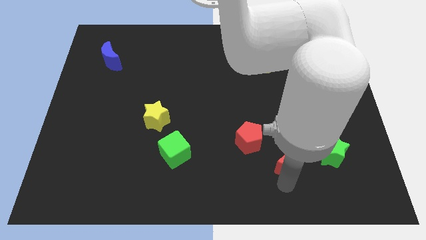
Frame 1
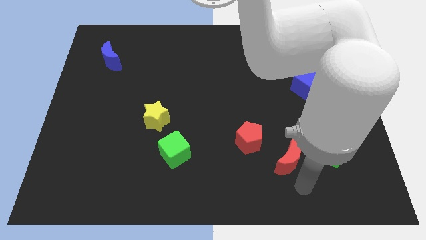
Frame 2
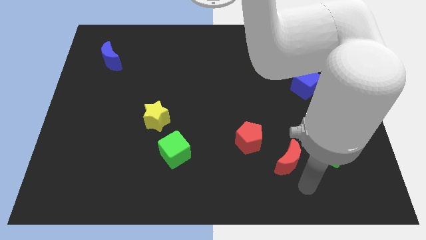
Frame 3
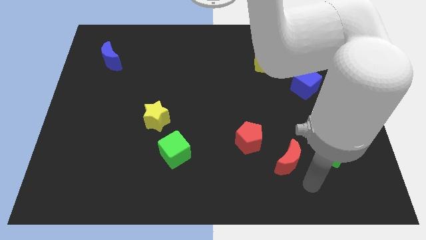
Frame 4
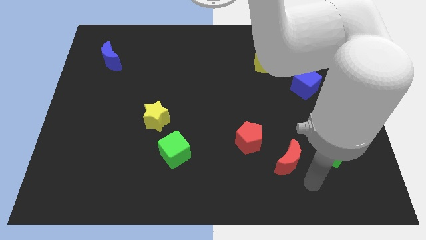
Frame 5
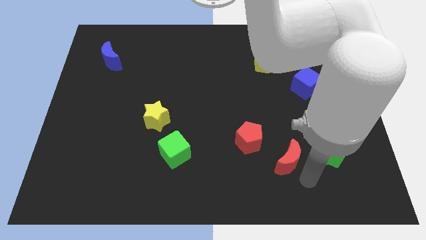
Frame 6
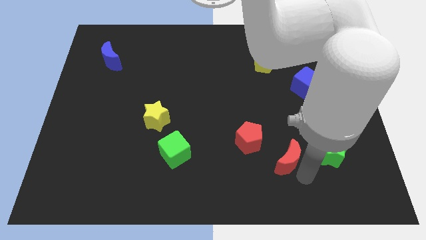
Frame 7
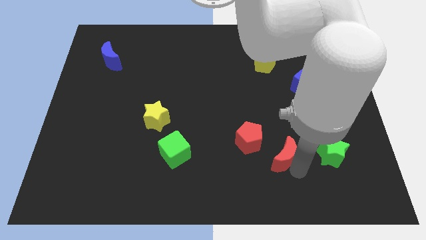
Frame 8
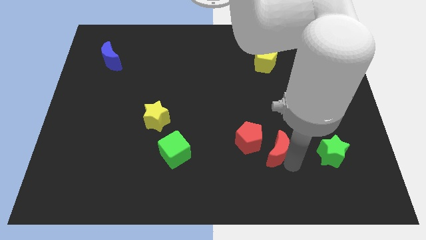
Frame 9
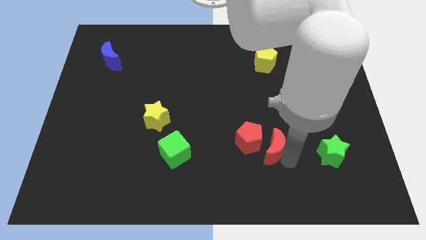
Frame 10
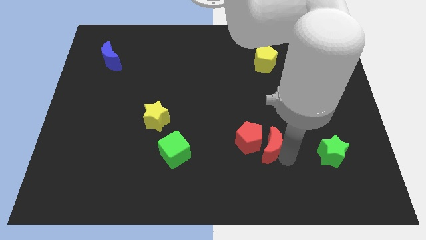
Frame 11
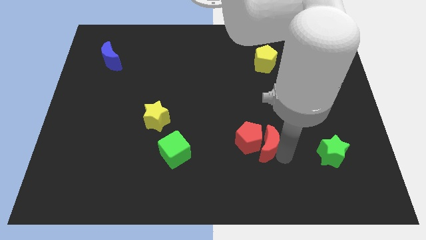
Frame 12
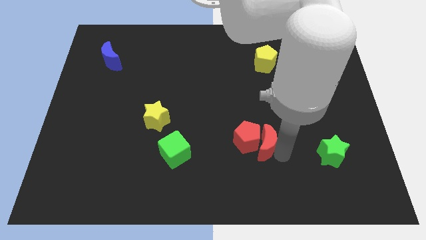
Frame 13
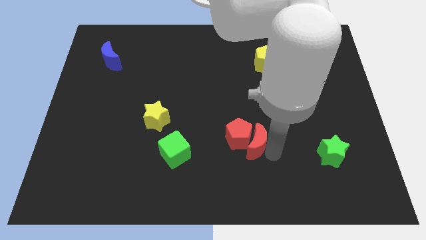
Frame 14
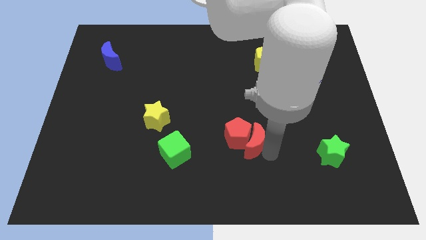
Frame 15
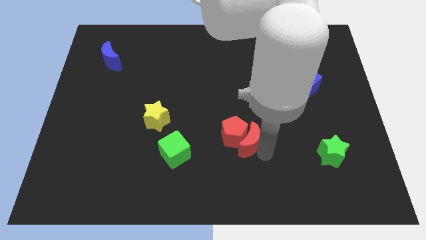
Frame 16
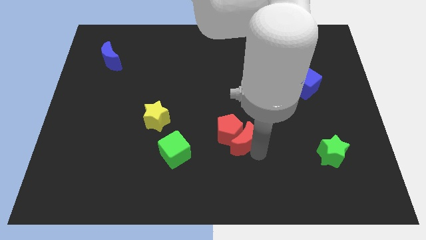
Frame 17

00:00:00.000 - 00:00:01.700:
push the red moon into the red pentagon

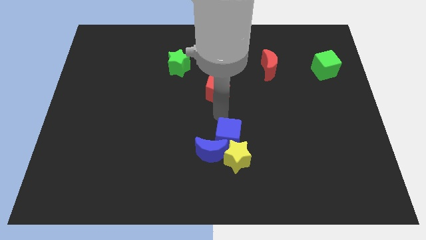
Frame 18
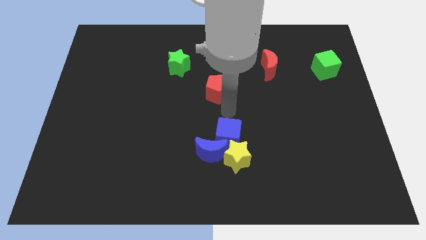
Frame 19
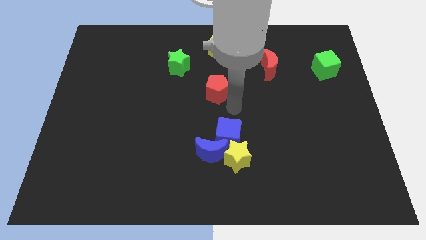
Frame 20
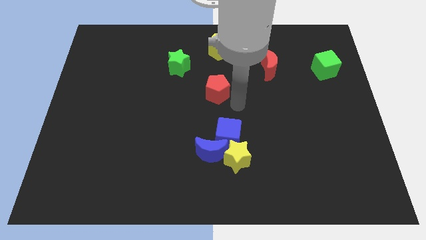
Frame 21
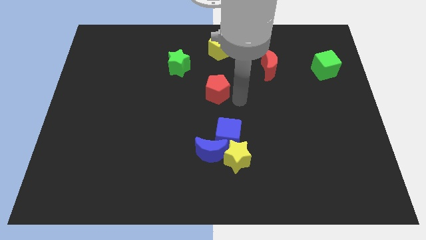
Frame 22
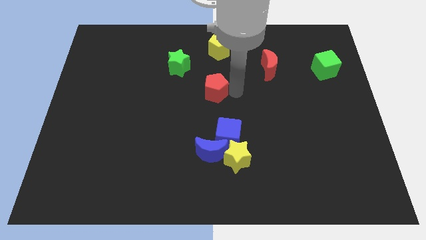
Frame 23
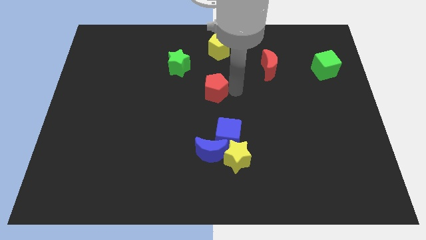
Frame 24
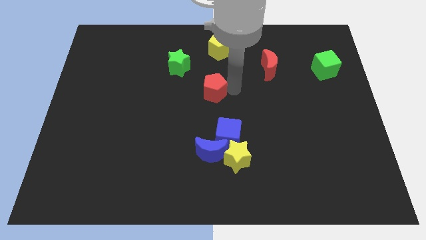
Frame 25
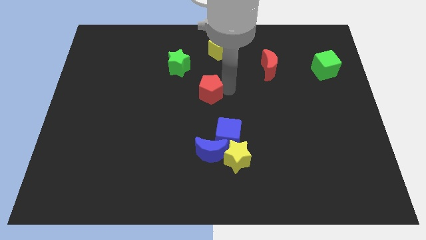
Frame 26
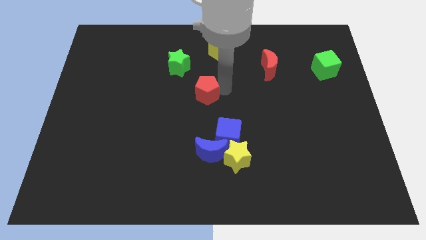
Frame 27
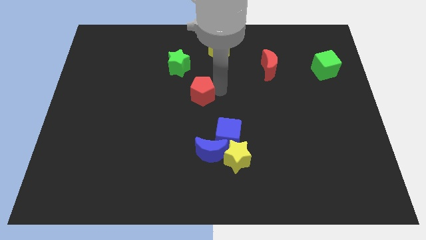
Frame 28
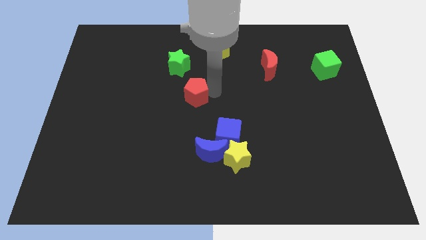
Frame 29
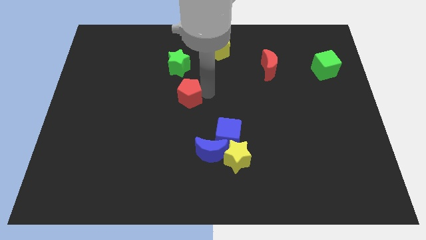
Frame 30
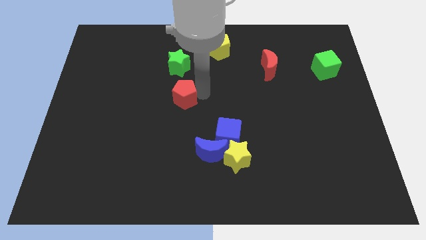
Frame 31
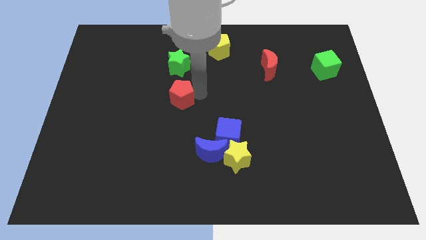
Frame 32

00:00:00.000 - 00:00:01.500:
push the red pentagon to the bottom of the green star

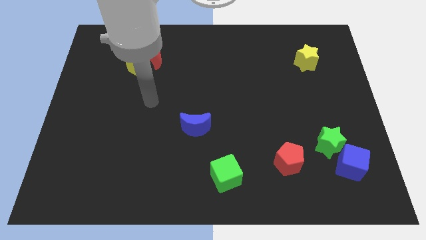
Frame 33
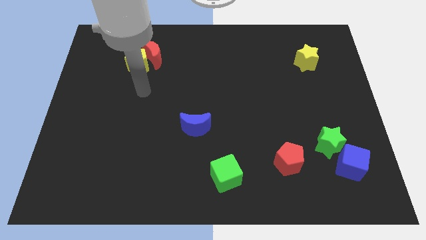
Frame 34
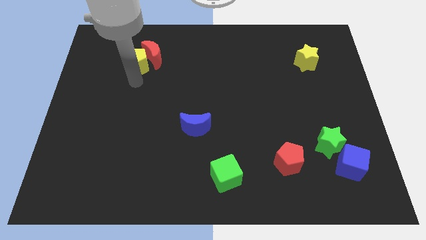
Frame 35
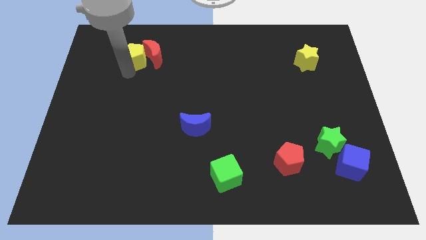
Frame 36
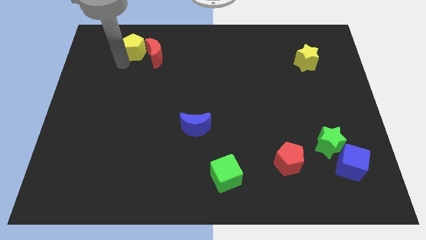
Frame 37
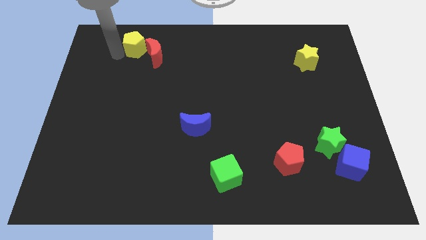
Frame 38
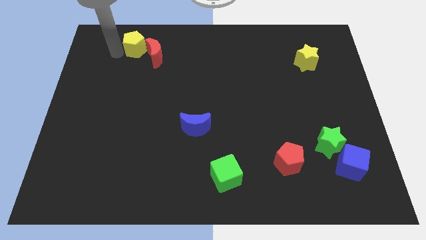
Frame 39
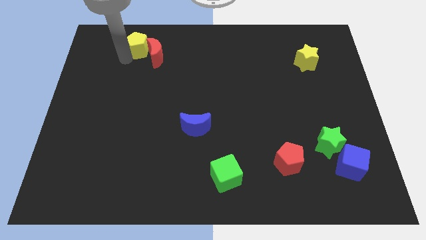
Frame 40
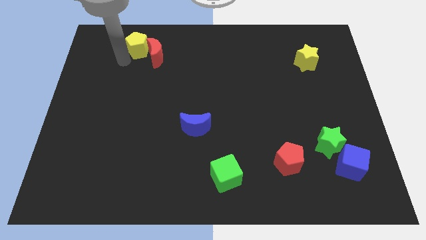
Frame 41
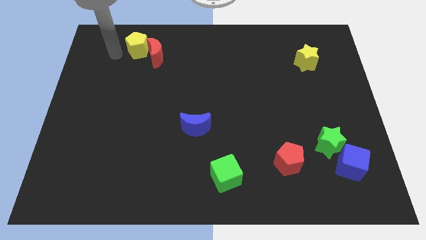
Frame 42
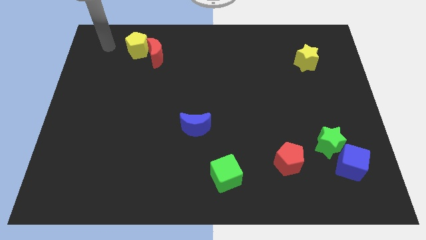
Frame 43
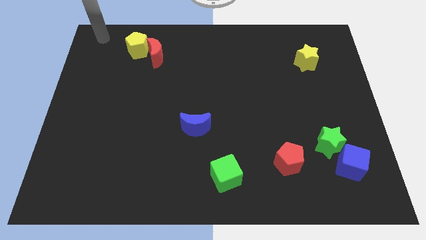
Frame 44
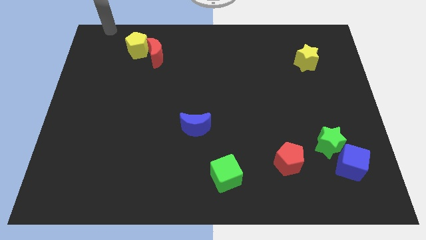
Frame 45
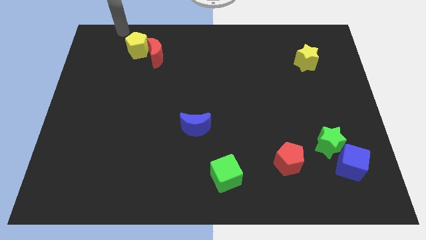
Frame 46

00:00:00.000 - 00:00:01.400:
place the yellow pentagon above the red moon

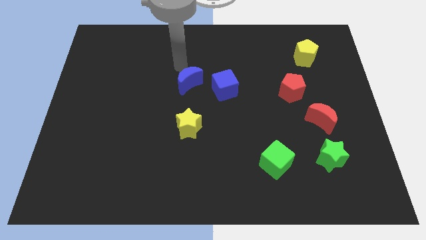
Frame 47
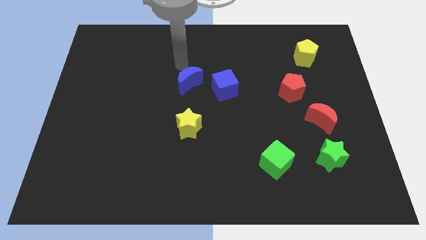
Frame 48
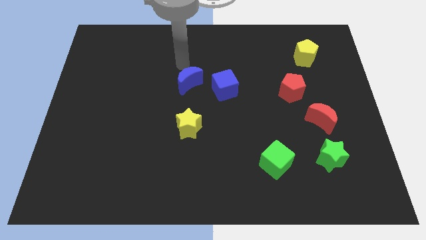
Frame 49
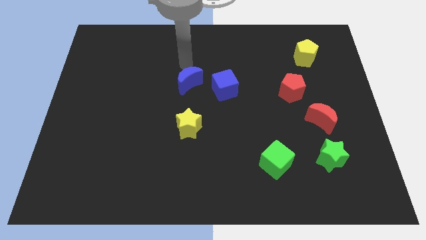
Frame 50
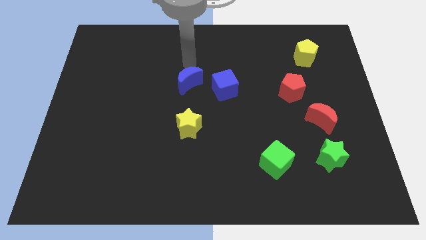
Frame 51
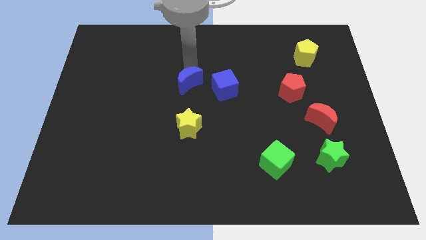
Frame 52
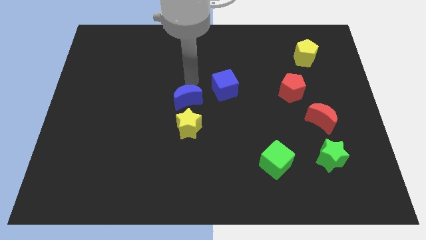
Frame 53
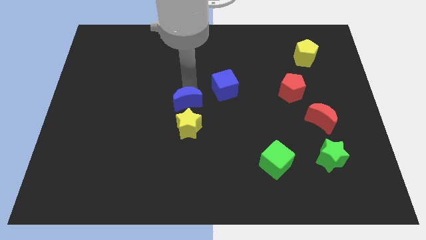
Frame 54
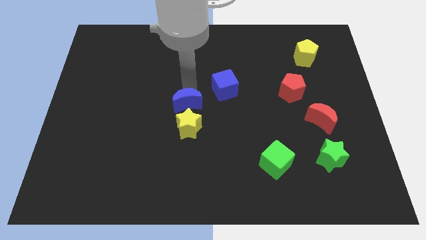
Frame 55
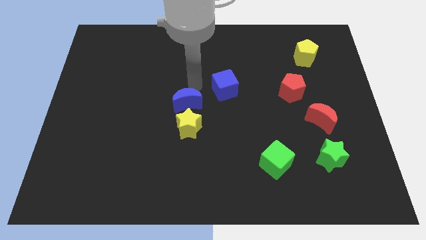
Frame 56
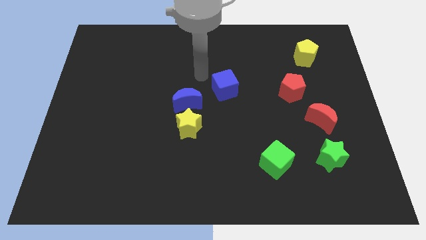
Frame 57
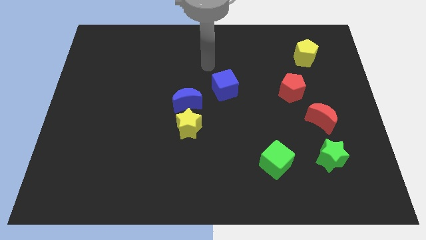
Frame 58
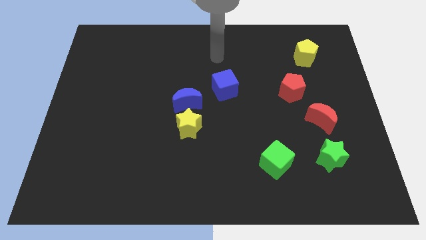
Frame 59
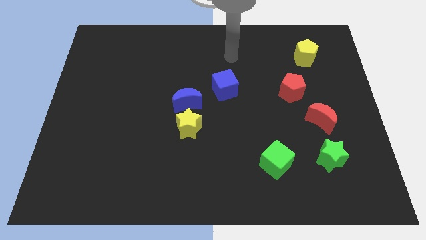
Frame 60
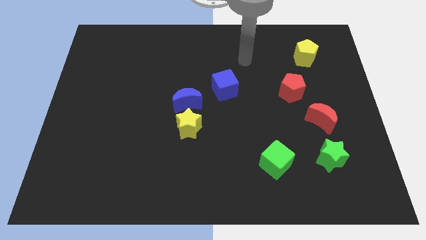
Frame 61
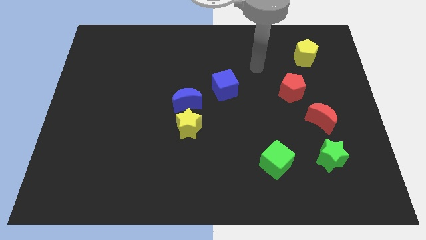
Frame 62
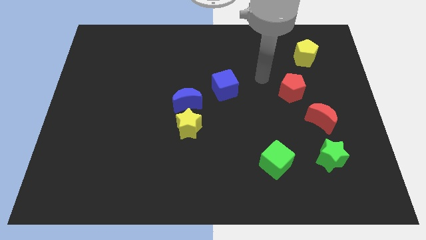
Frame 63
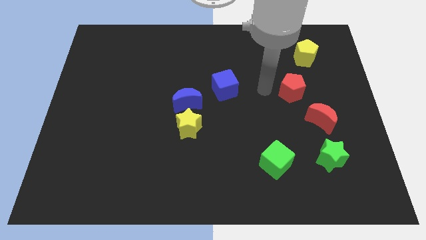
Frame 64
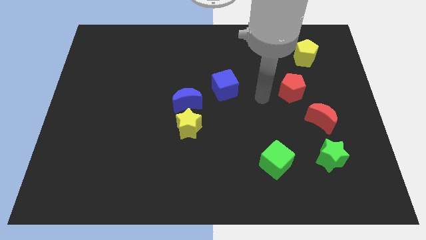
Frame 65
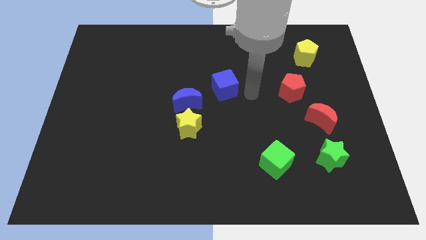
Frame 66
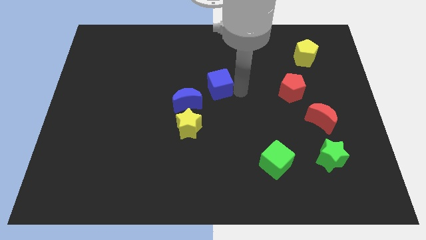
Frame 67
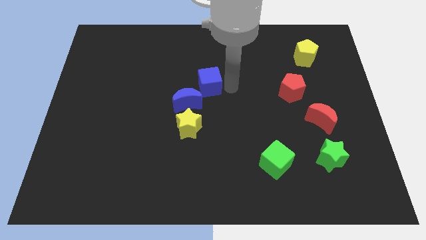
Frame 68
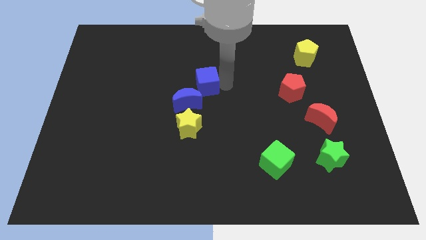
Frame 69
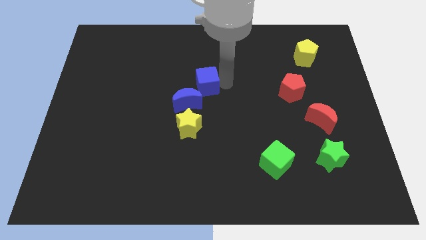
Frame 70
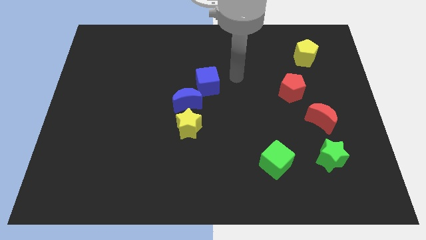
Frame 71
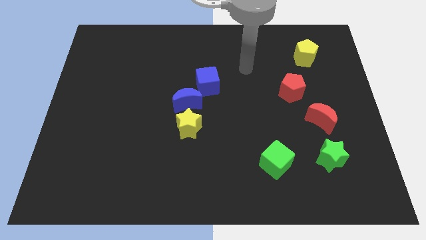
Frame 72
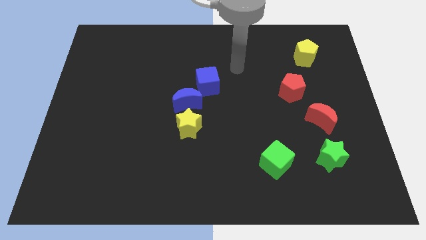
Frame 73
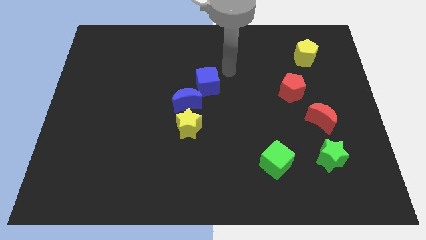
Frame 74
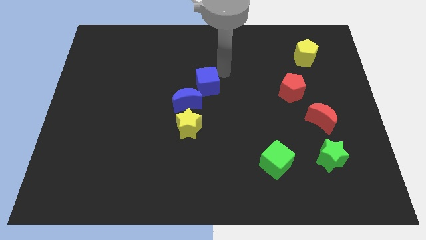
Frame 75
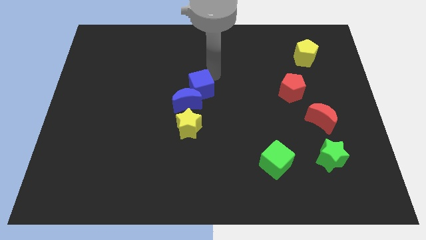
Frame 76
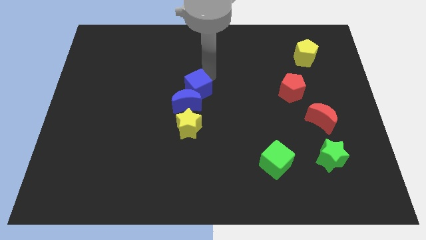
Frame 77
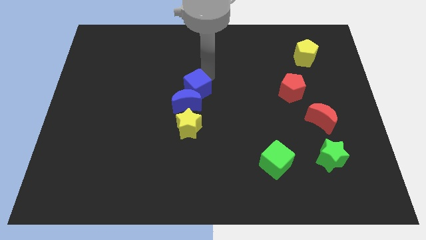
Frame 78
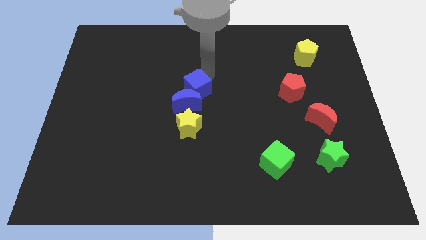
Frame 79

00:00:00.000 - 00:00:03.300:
place the blue moon at the top of the yellow star

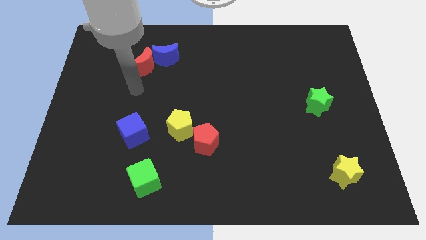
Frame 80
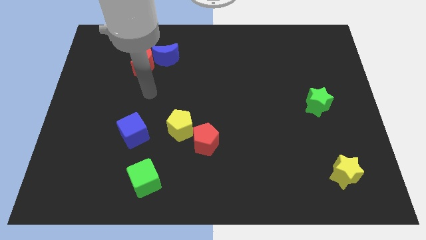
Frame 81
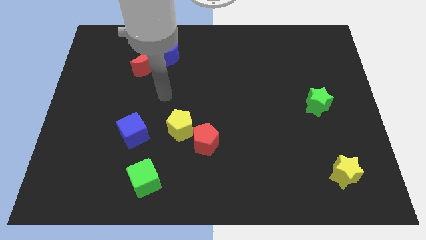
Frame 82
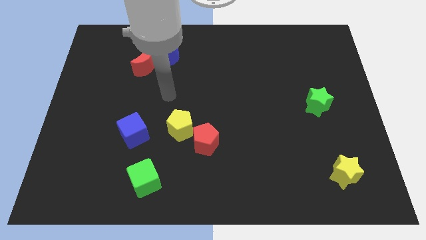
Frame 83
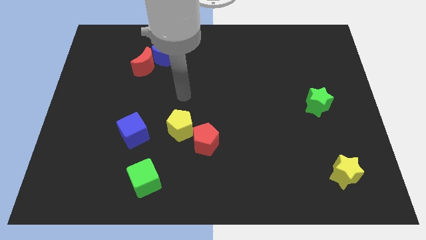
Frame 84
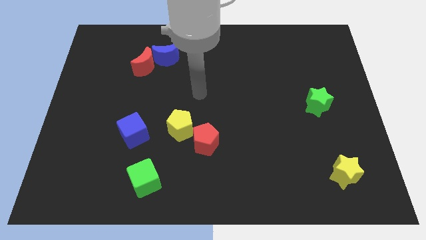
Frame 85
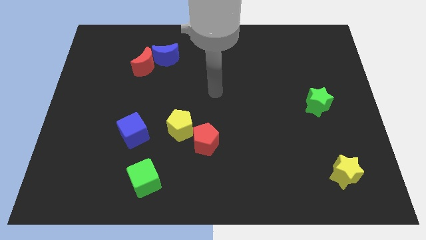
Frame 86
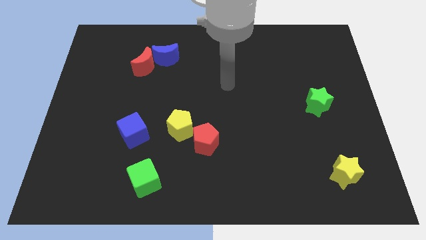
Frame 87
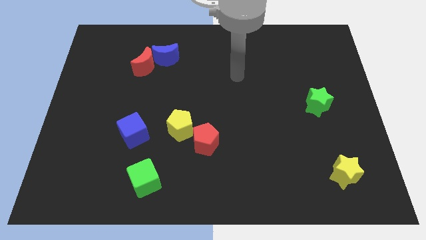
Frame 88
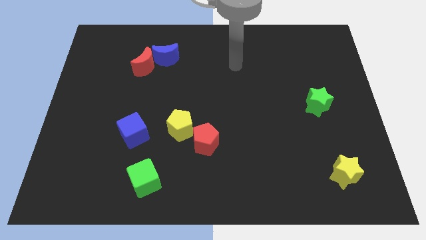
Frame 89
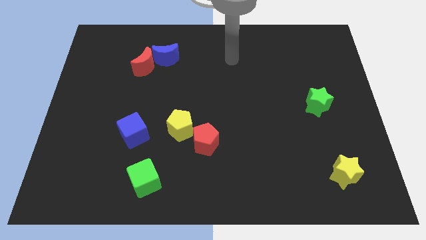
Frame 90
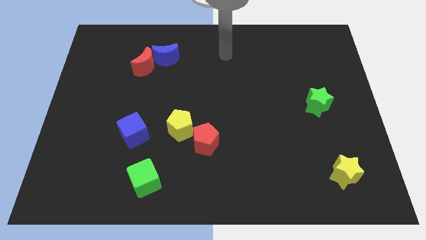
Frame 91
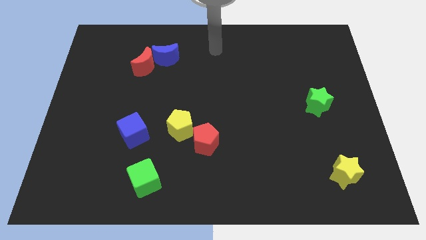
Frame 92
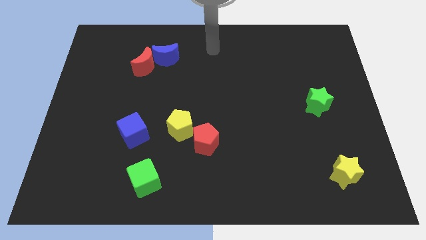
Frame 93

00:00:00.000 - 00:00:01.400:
move the arm towards the blue crescent
